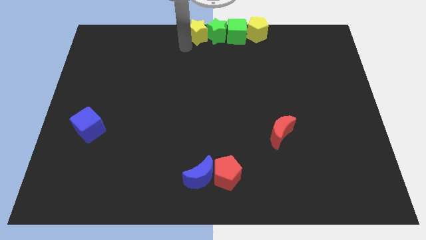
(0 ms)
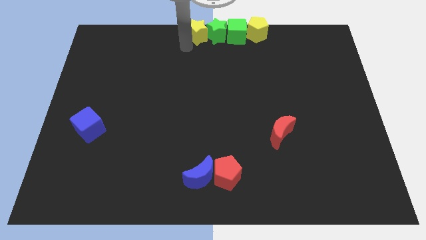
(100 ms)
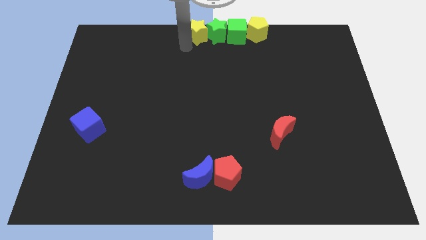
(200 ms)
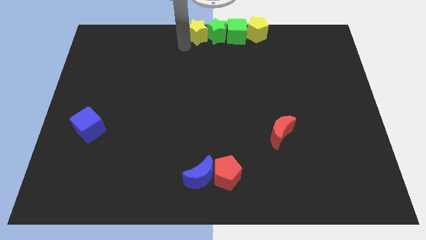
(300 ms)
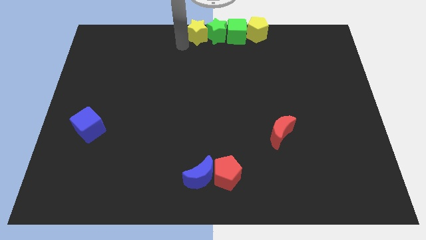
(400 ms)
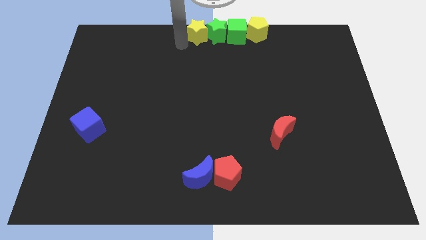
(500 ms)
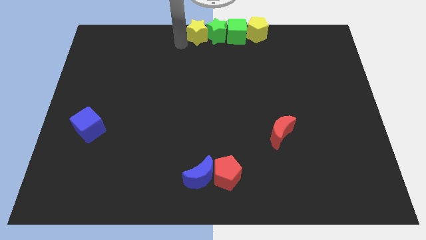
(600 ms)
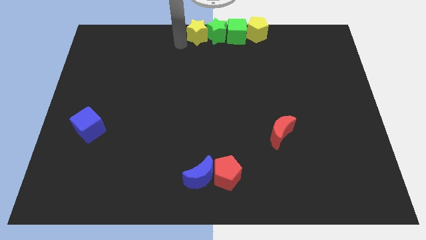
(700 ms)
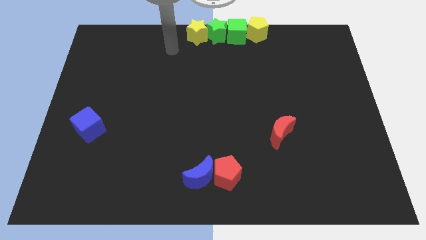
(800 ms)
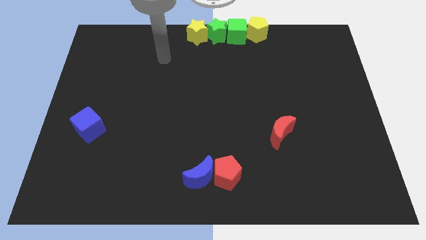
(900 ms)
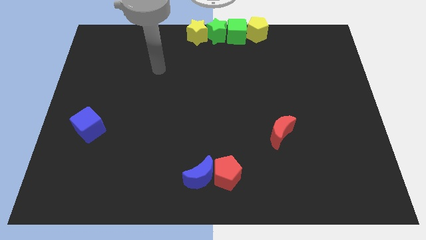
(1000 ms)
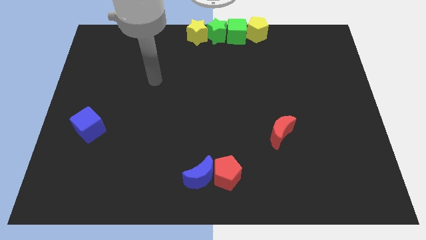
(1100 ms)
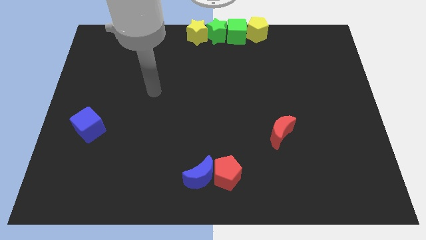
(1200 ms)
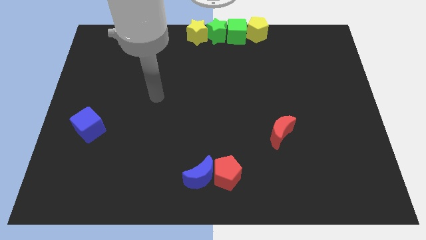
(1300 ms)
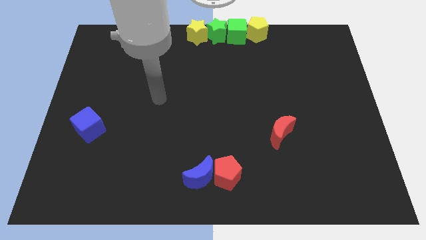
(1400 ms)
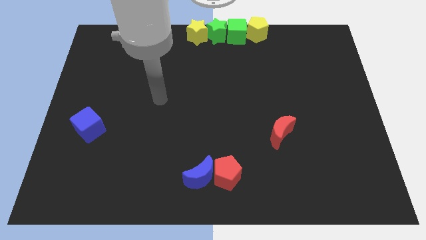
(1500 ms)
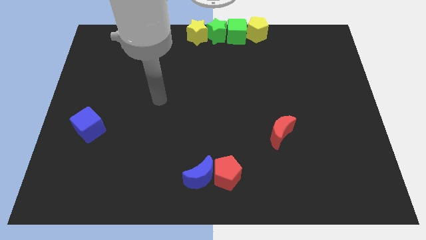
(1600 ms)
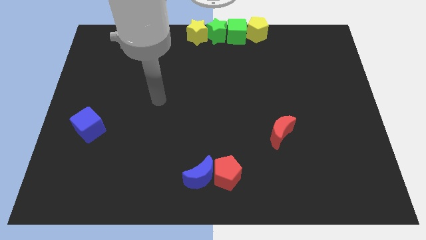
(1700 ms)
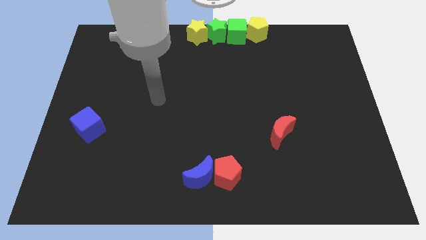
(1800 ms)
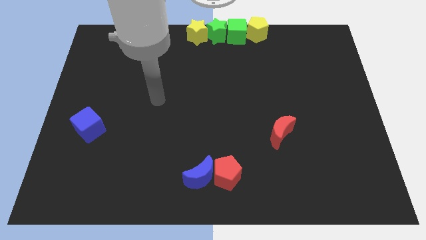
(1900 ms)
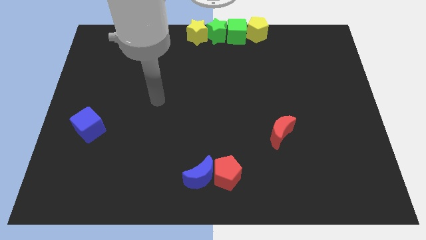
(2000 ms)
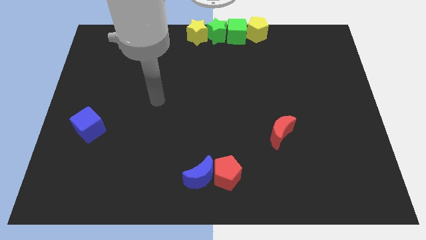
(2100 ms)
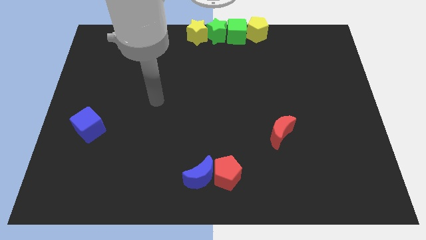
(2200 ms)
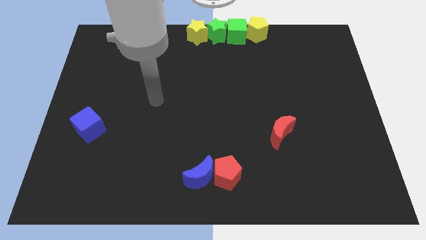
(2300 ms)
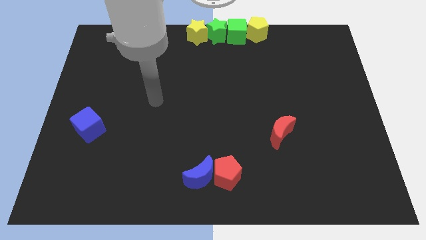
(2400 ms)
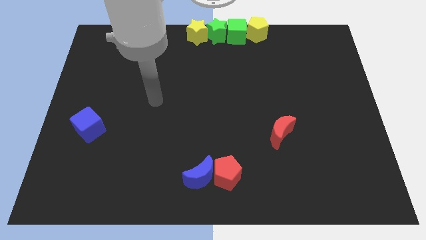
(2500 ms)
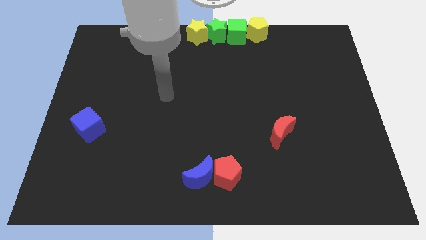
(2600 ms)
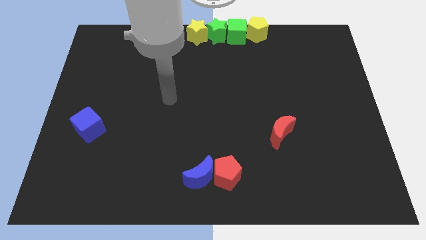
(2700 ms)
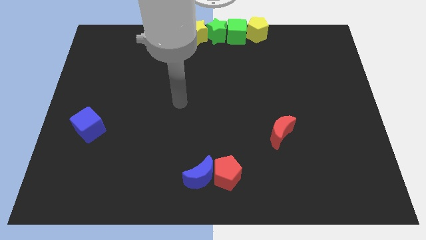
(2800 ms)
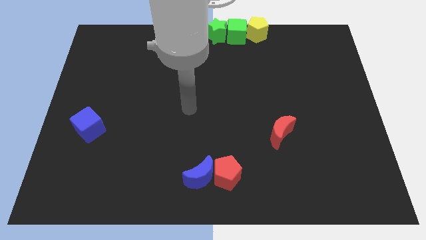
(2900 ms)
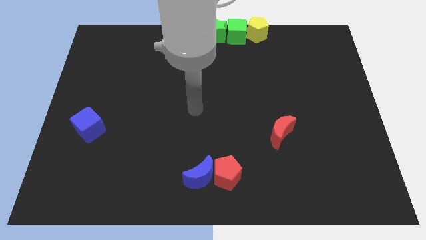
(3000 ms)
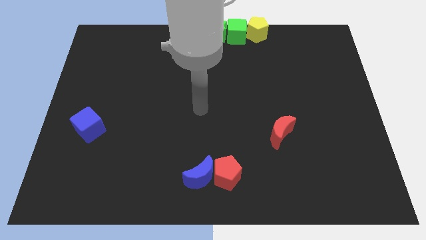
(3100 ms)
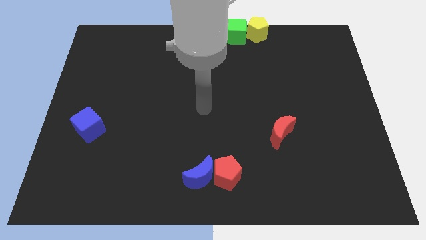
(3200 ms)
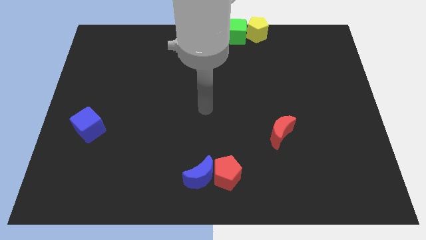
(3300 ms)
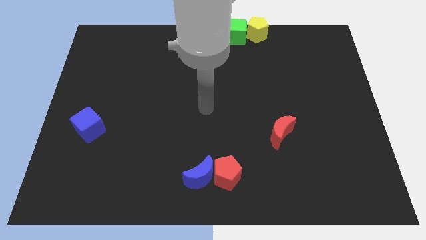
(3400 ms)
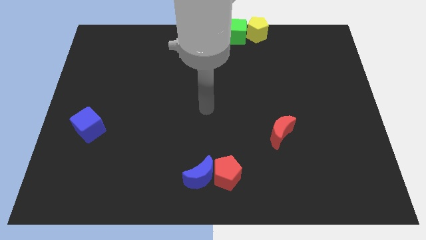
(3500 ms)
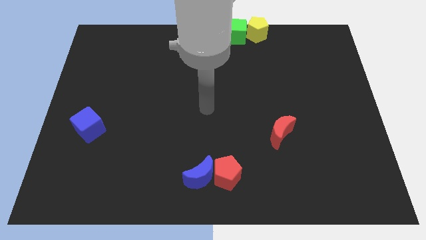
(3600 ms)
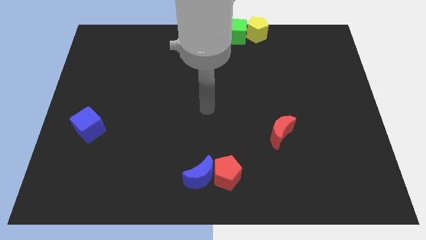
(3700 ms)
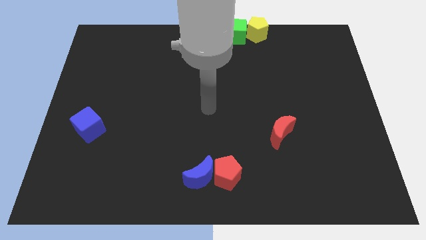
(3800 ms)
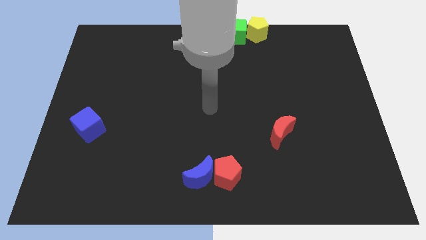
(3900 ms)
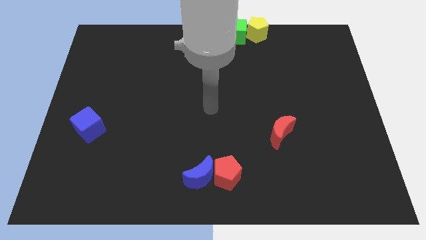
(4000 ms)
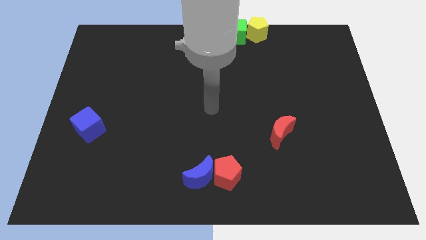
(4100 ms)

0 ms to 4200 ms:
move your arm to the center of the board

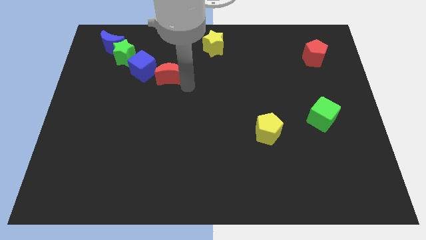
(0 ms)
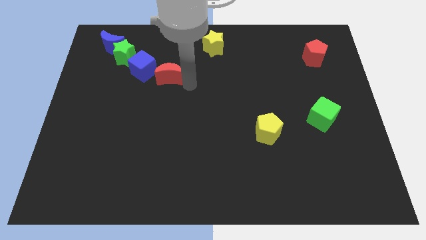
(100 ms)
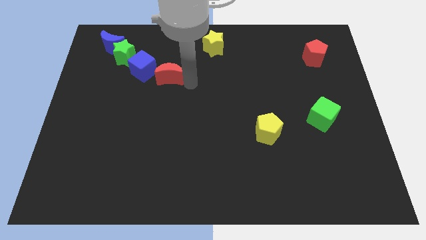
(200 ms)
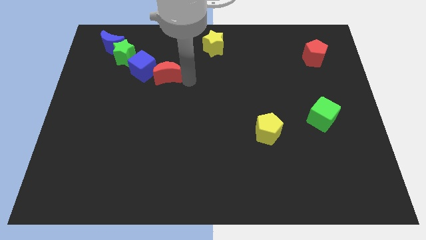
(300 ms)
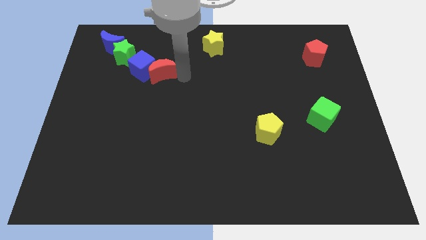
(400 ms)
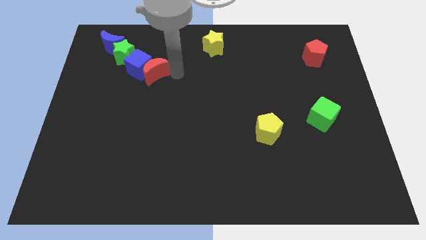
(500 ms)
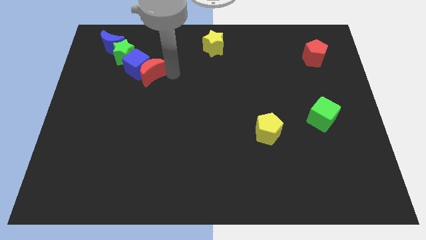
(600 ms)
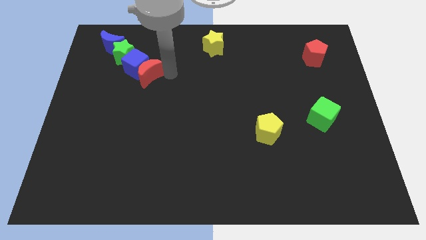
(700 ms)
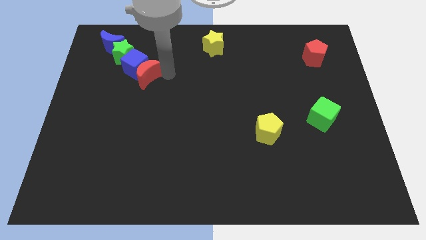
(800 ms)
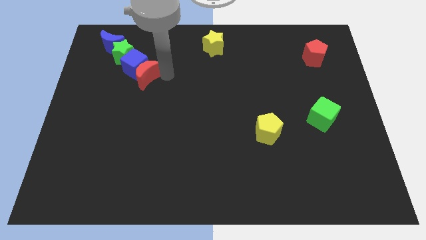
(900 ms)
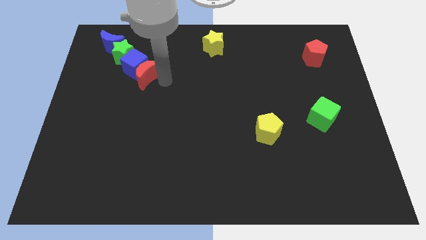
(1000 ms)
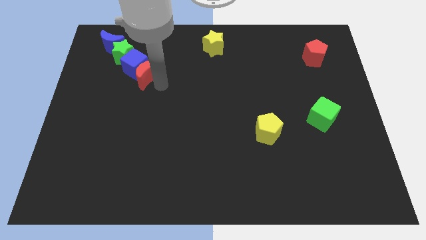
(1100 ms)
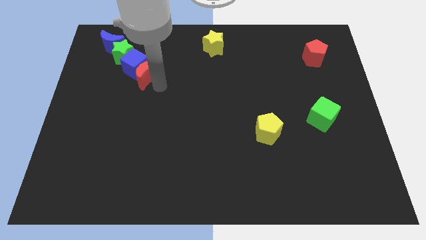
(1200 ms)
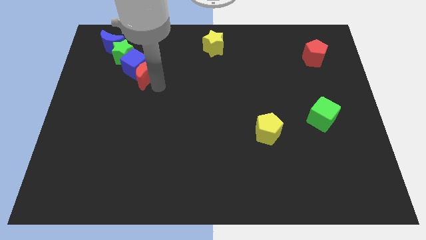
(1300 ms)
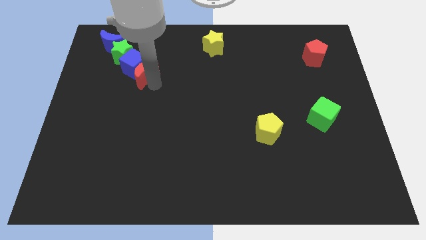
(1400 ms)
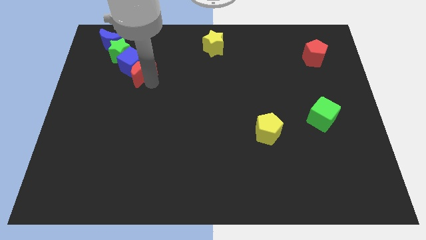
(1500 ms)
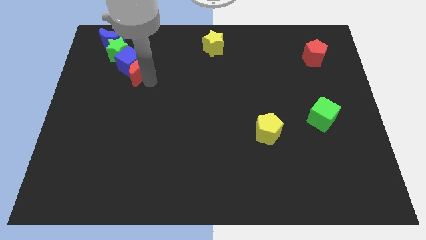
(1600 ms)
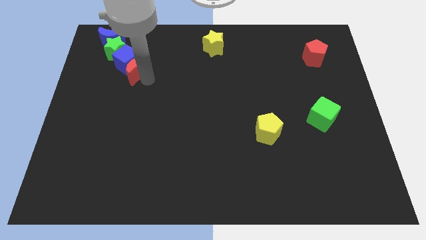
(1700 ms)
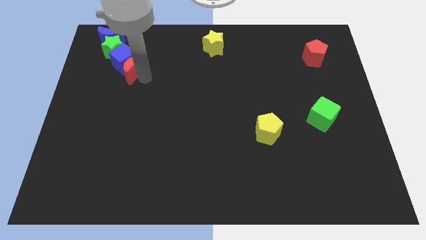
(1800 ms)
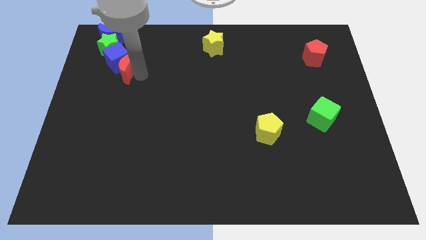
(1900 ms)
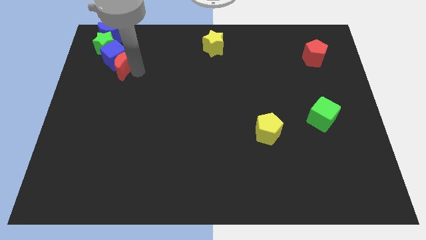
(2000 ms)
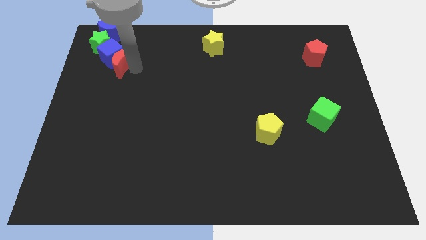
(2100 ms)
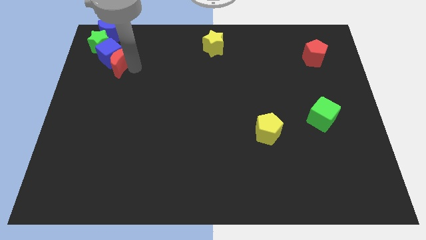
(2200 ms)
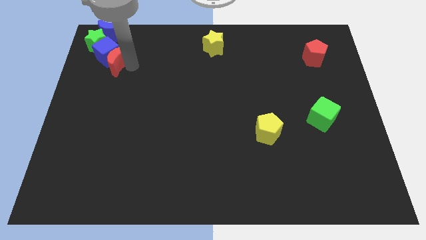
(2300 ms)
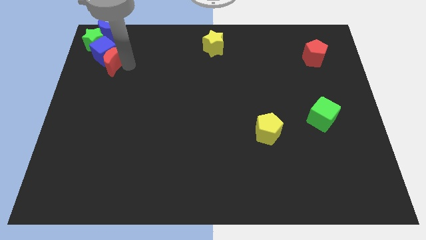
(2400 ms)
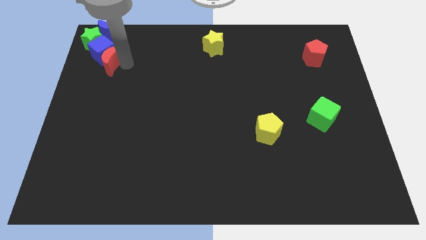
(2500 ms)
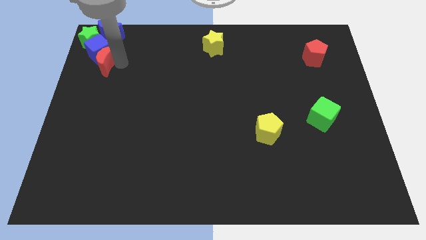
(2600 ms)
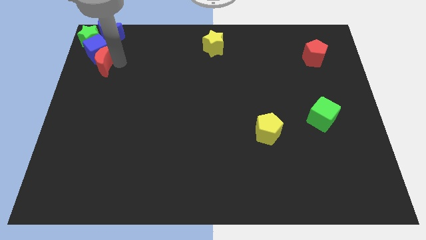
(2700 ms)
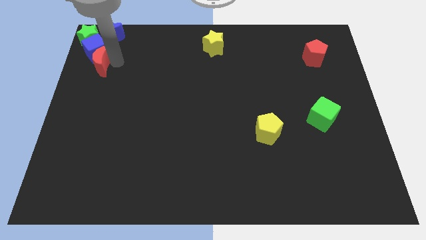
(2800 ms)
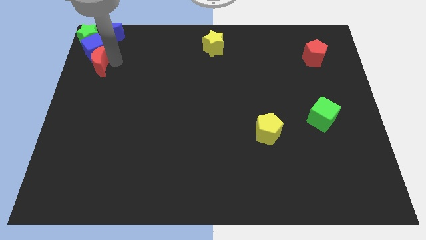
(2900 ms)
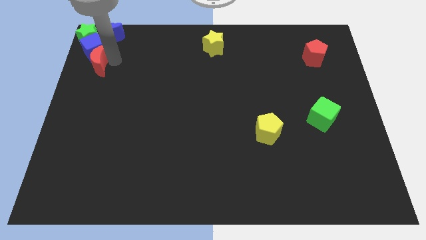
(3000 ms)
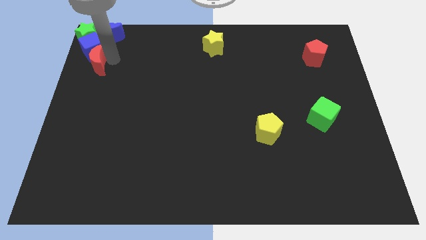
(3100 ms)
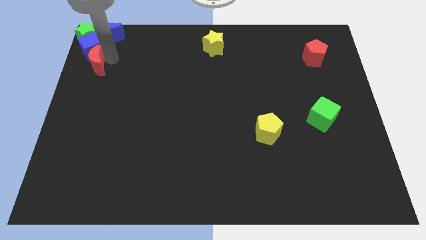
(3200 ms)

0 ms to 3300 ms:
push green star blue cube and red moon to the top left corner of the board

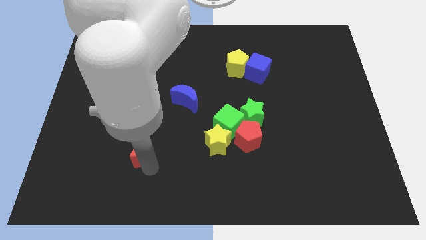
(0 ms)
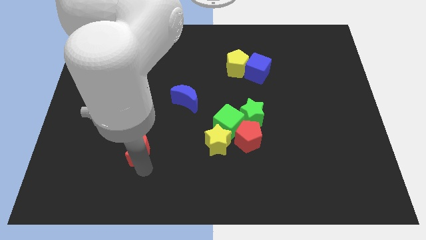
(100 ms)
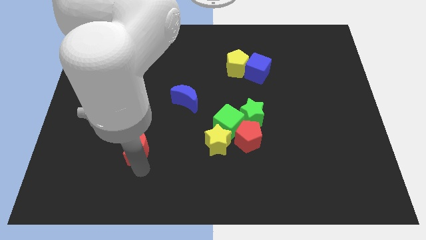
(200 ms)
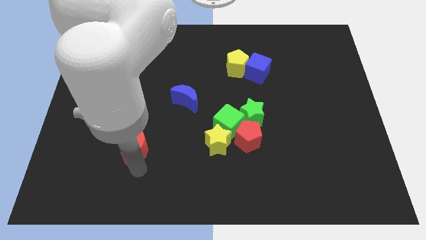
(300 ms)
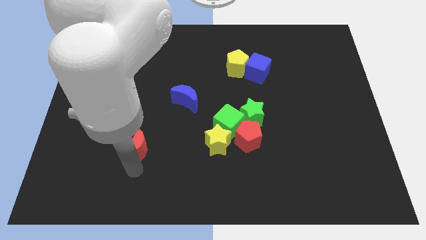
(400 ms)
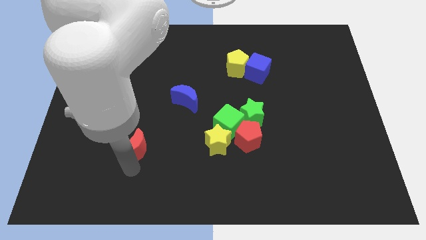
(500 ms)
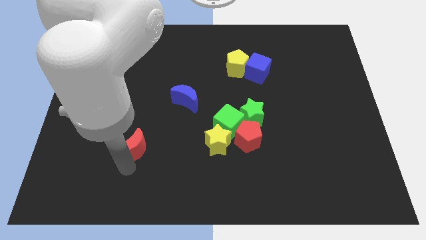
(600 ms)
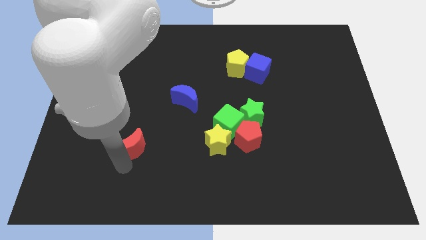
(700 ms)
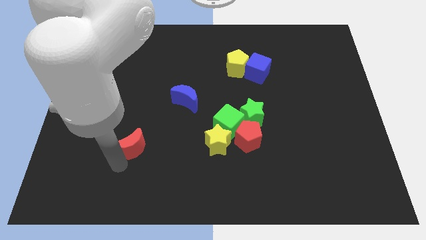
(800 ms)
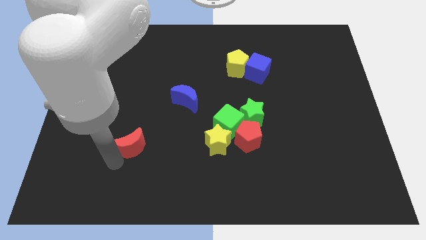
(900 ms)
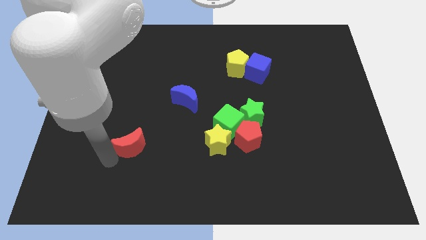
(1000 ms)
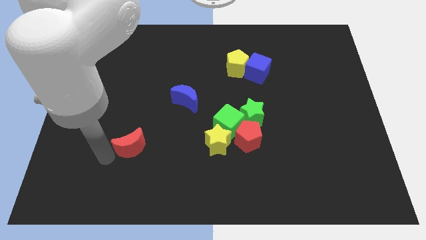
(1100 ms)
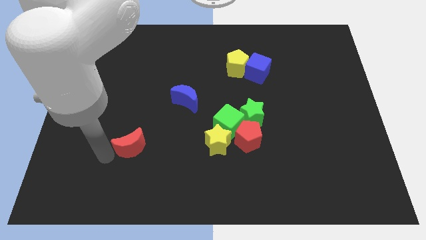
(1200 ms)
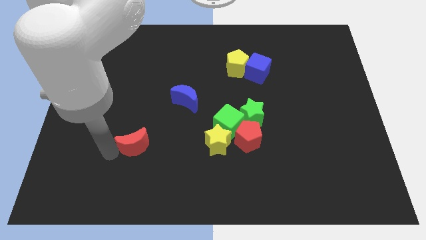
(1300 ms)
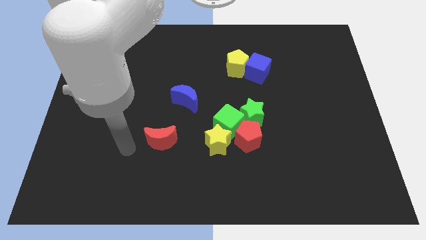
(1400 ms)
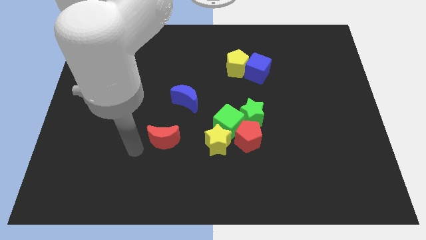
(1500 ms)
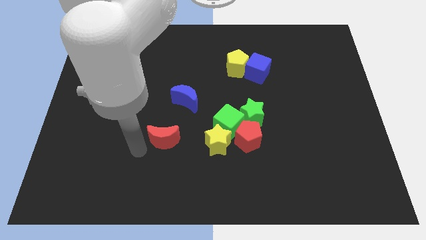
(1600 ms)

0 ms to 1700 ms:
push the red crescent to the parallel left to the yellow star
